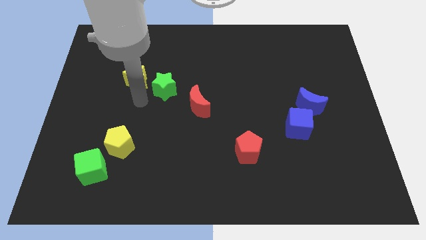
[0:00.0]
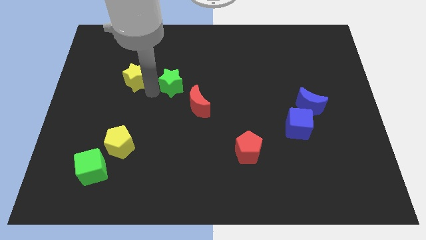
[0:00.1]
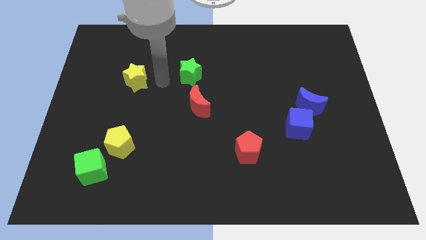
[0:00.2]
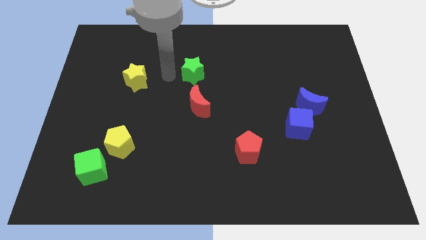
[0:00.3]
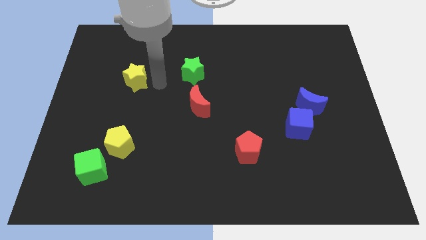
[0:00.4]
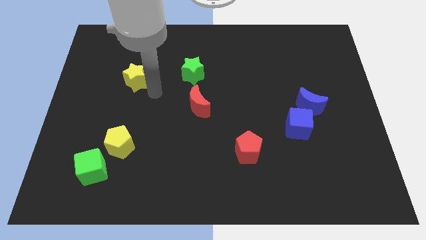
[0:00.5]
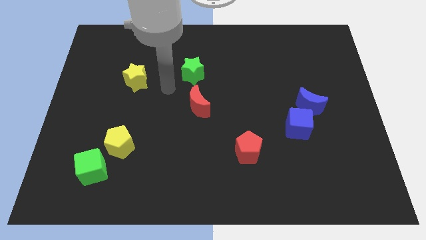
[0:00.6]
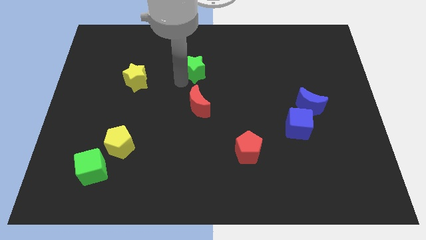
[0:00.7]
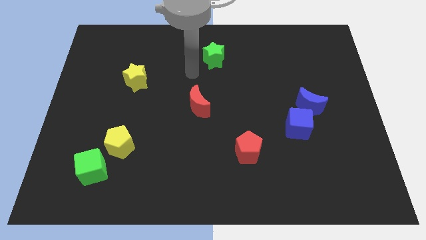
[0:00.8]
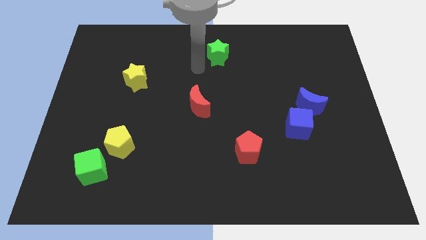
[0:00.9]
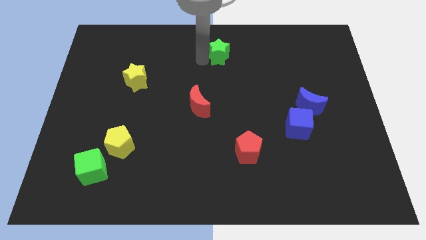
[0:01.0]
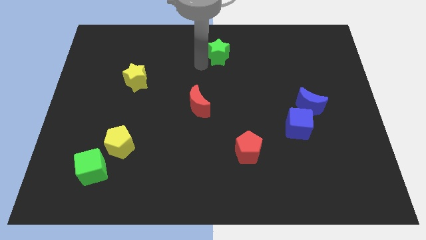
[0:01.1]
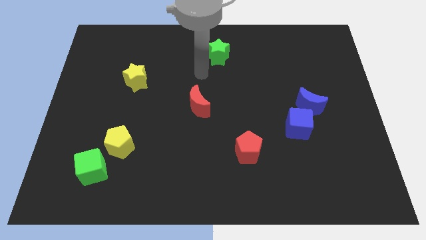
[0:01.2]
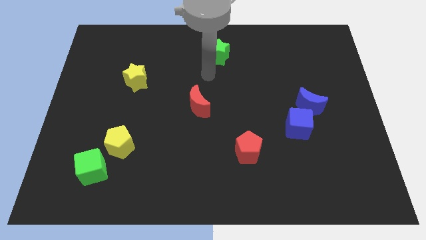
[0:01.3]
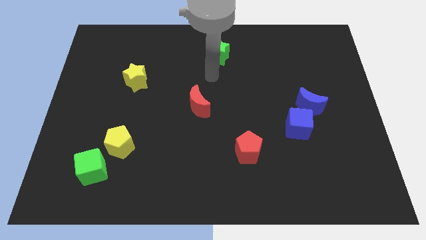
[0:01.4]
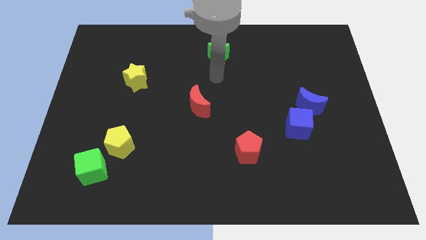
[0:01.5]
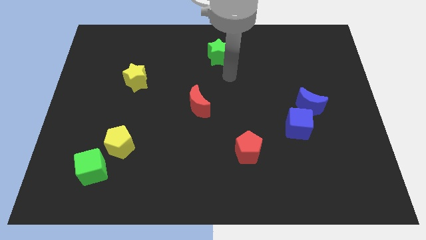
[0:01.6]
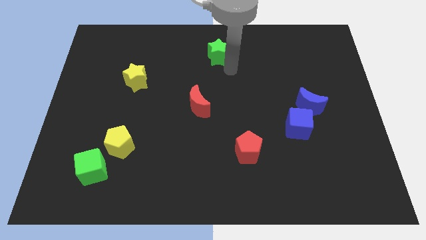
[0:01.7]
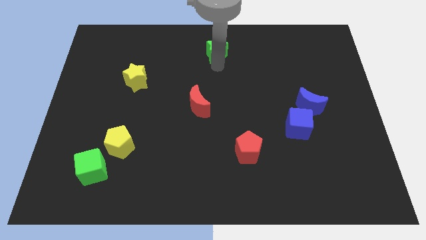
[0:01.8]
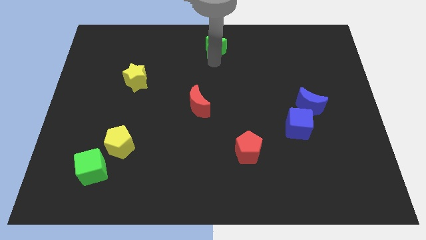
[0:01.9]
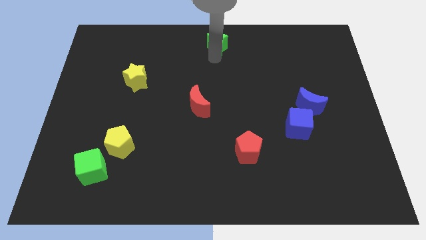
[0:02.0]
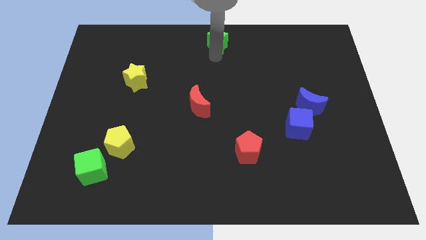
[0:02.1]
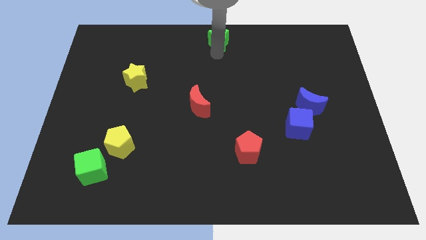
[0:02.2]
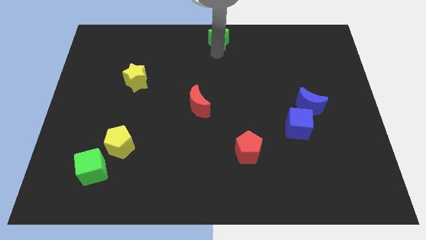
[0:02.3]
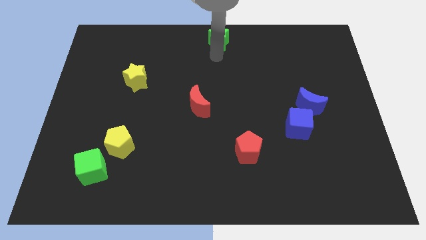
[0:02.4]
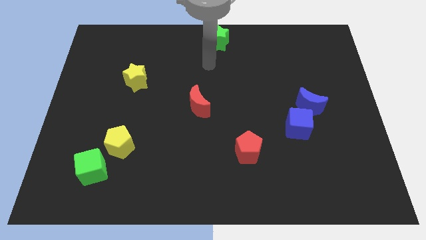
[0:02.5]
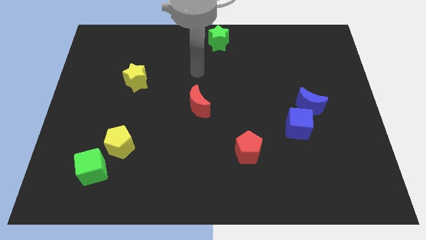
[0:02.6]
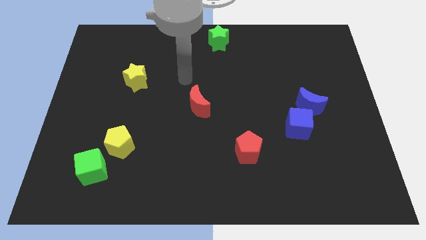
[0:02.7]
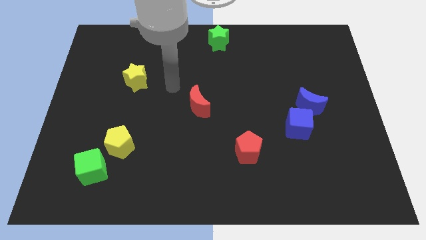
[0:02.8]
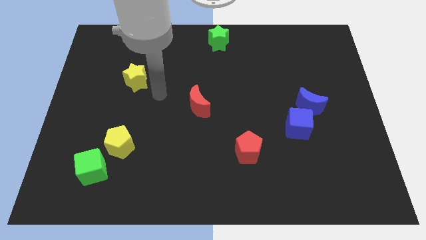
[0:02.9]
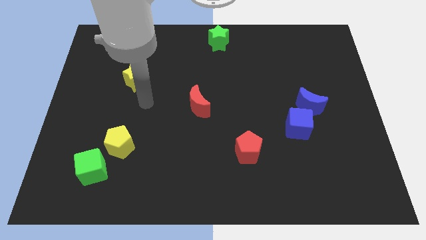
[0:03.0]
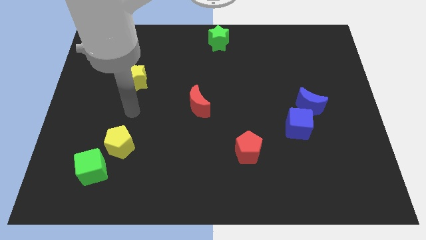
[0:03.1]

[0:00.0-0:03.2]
place the green star to the top center of the board

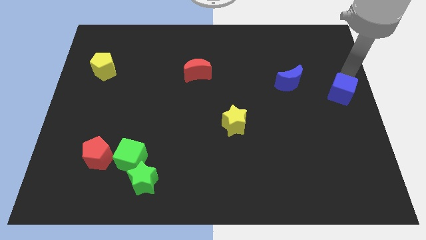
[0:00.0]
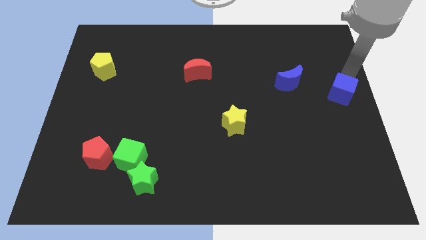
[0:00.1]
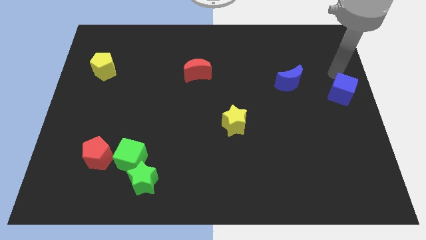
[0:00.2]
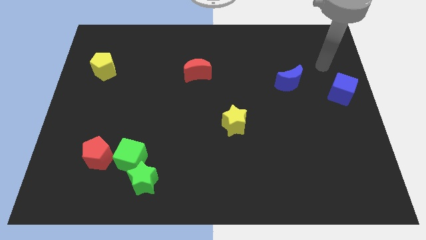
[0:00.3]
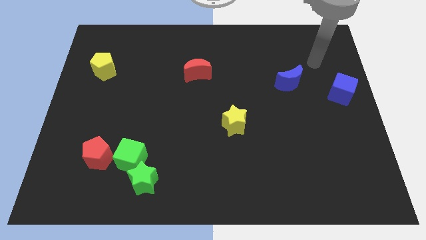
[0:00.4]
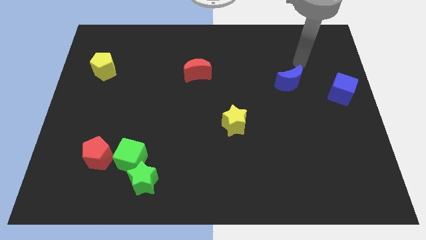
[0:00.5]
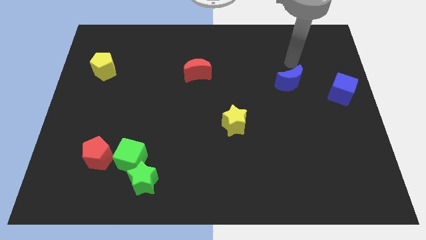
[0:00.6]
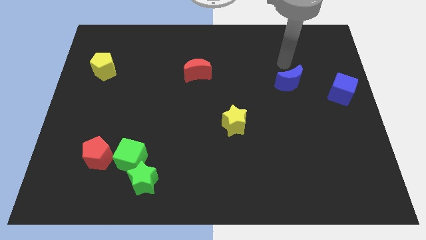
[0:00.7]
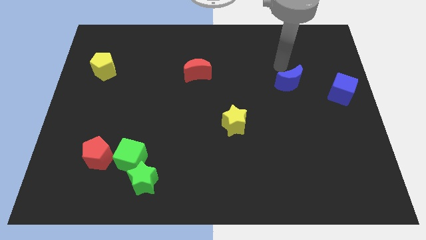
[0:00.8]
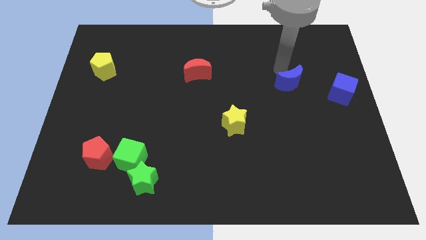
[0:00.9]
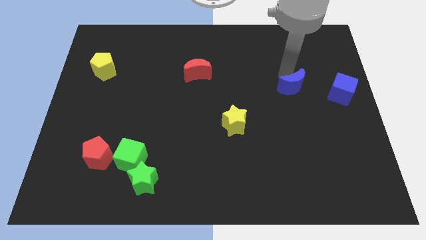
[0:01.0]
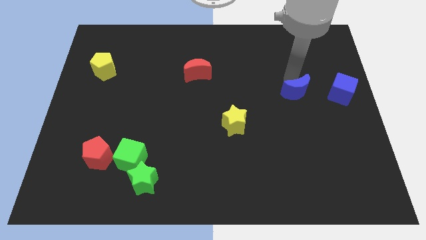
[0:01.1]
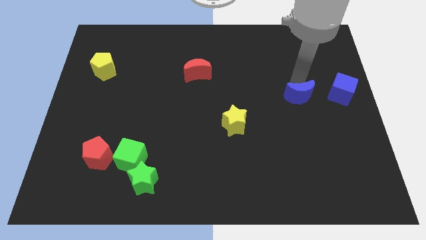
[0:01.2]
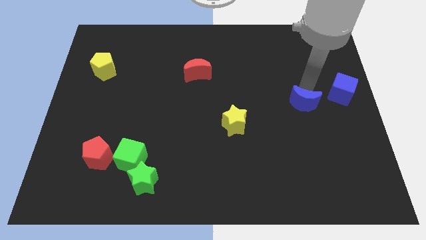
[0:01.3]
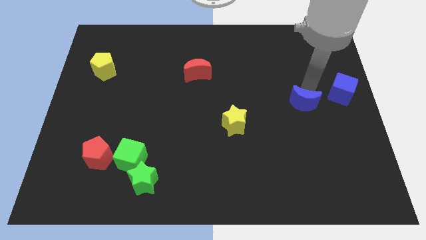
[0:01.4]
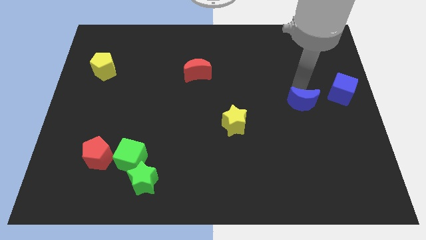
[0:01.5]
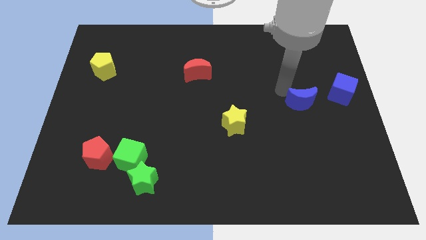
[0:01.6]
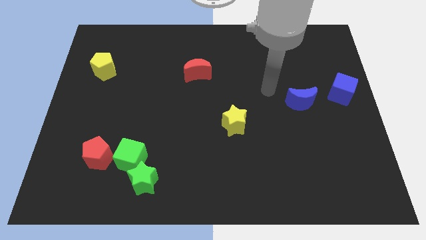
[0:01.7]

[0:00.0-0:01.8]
push the blue moon to the left of blue cube

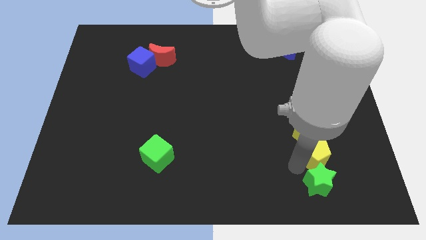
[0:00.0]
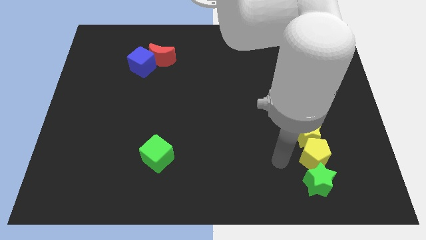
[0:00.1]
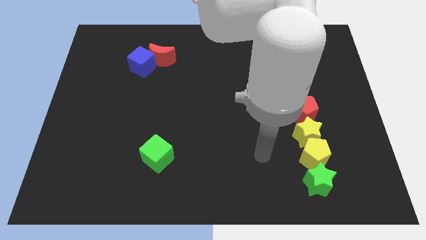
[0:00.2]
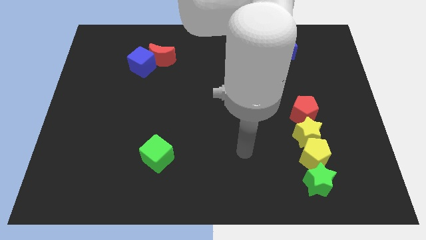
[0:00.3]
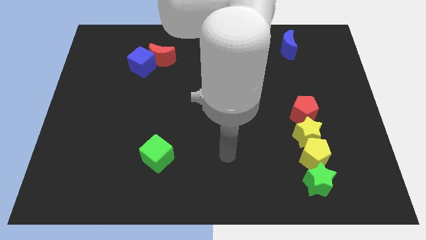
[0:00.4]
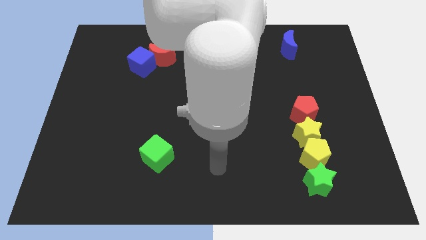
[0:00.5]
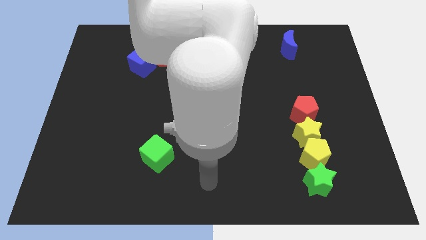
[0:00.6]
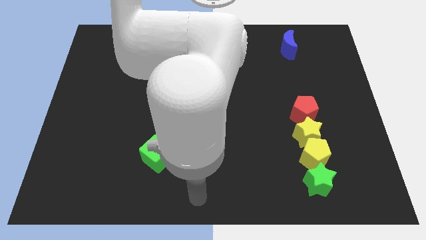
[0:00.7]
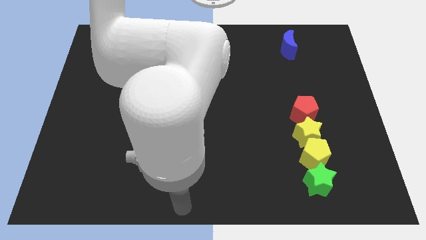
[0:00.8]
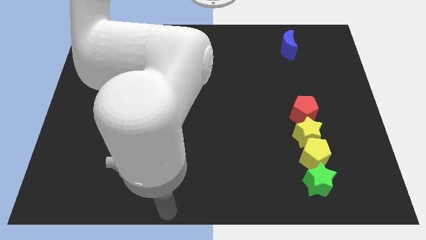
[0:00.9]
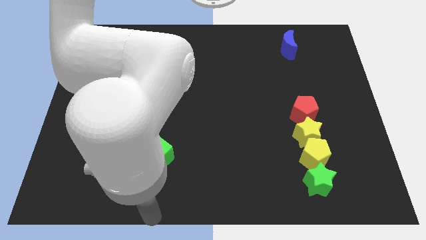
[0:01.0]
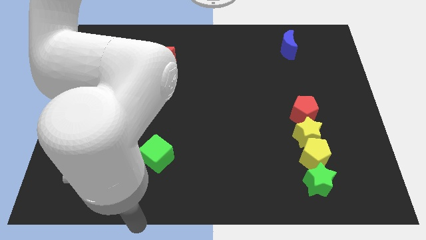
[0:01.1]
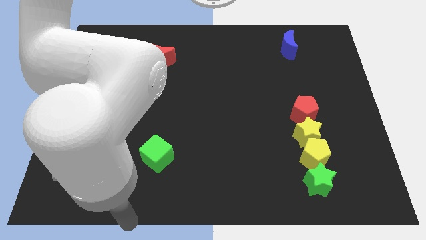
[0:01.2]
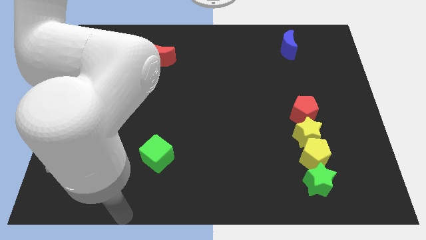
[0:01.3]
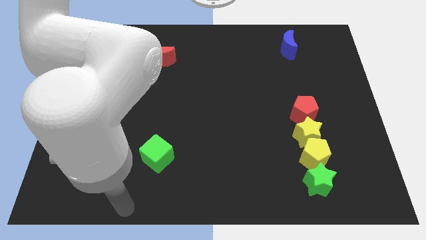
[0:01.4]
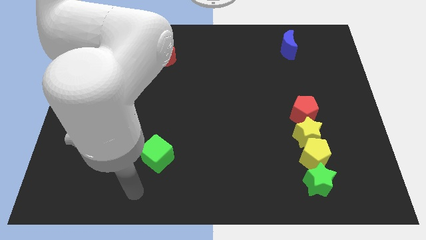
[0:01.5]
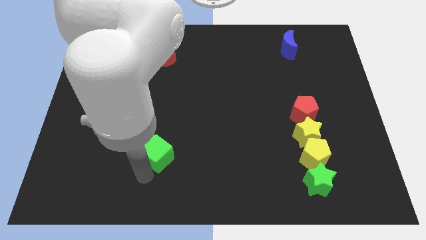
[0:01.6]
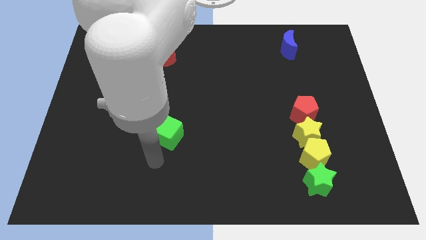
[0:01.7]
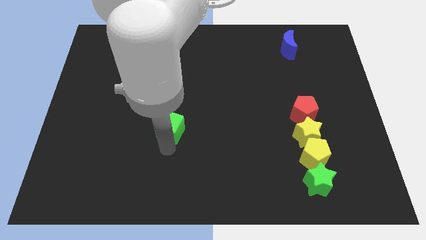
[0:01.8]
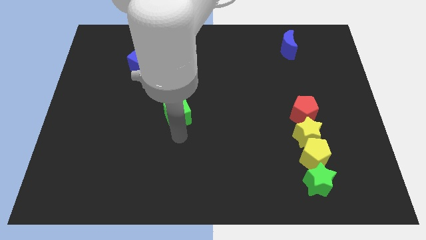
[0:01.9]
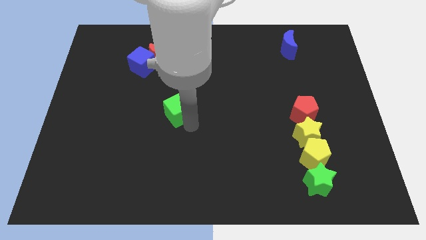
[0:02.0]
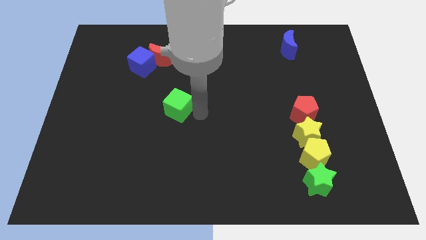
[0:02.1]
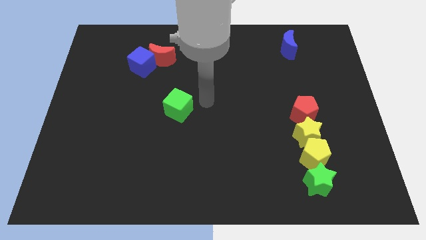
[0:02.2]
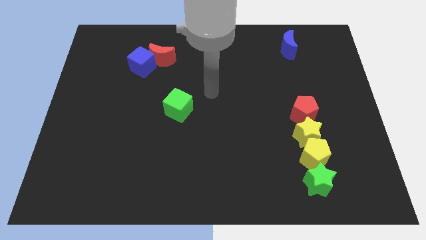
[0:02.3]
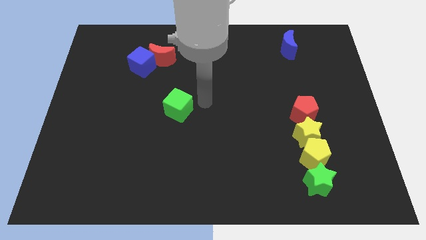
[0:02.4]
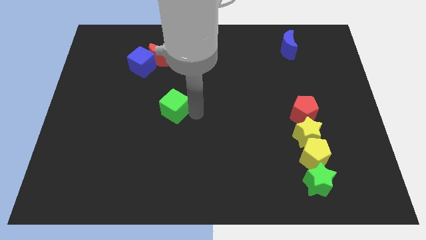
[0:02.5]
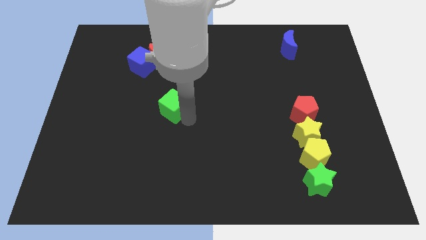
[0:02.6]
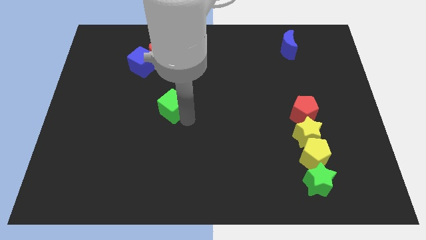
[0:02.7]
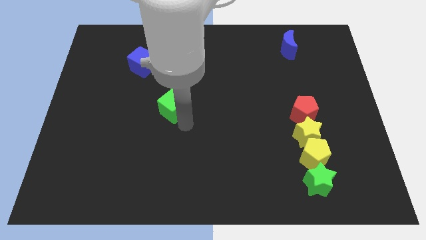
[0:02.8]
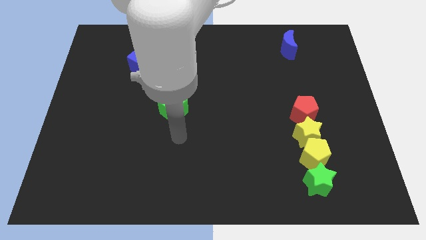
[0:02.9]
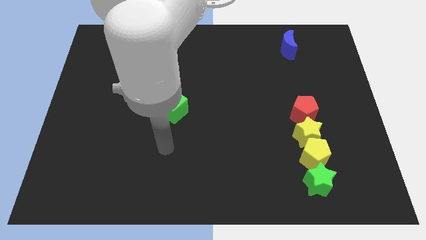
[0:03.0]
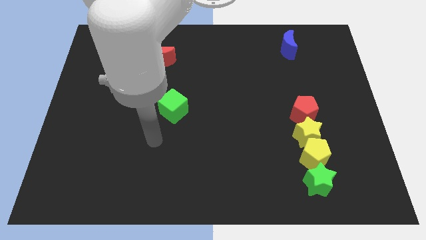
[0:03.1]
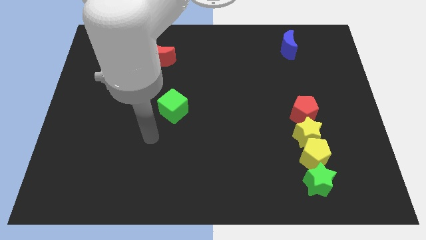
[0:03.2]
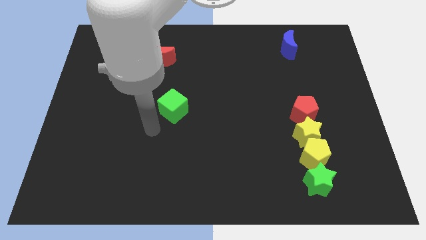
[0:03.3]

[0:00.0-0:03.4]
slide the green cube parallel left to the red pentagon

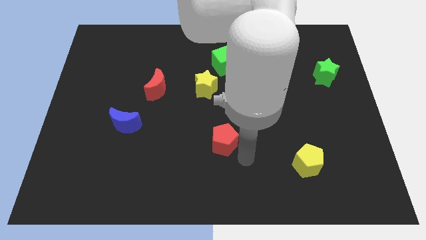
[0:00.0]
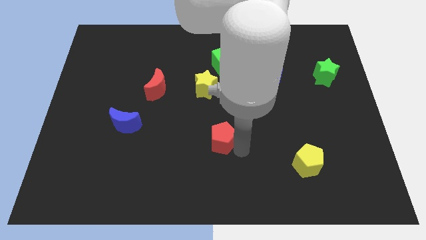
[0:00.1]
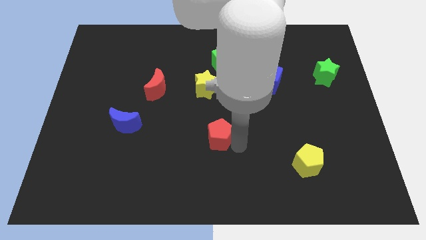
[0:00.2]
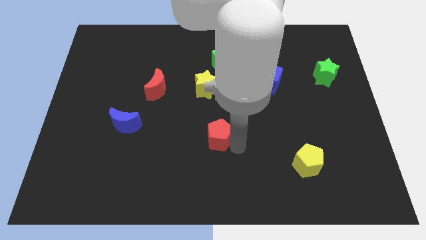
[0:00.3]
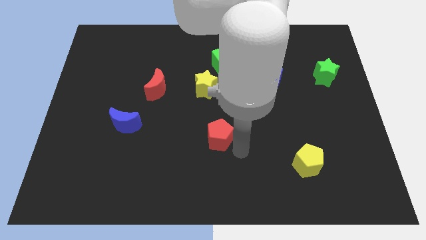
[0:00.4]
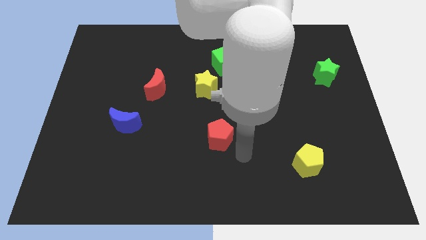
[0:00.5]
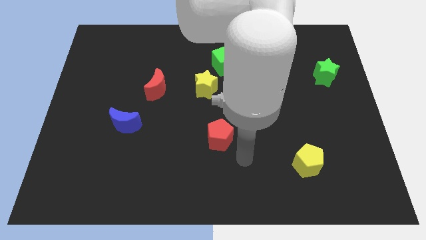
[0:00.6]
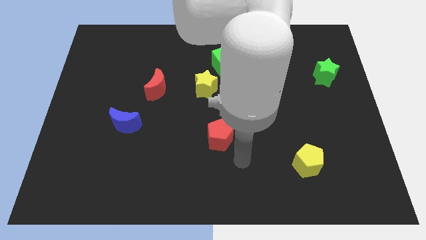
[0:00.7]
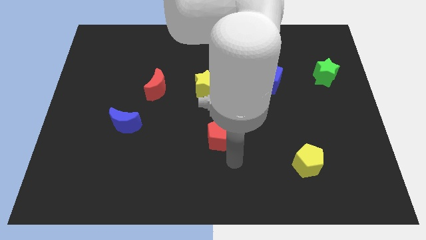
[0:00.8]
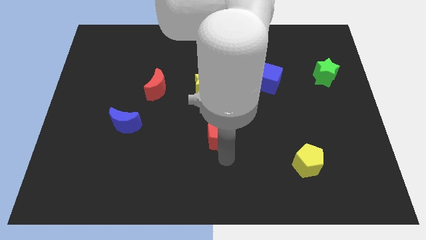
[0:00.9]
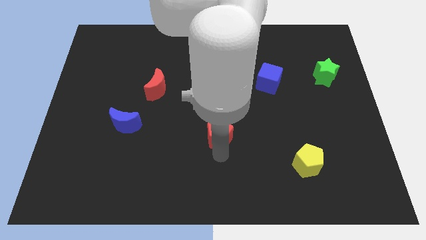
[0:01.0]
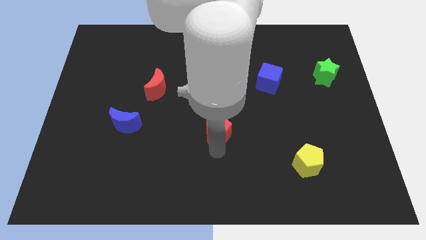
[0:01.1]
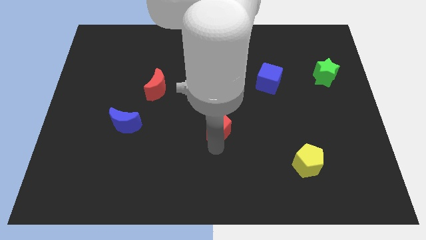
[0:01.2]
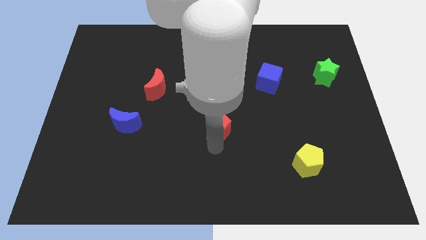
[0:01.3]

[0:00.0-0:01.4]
place the red pentagon vertically to the yellow star
